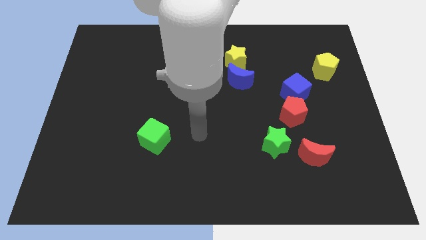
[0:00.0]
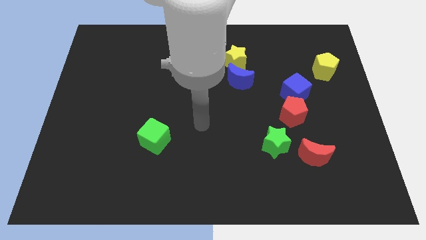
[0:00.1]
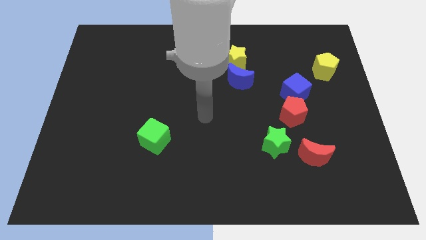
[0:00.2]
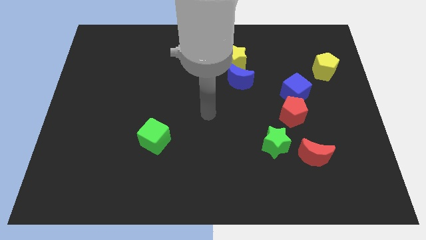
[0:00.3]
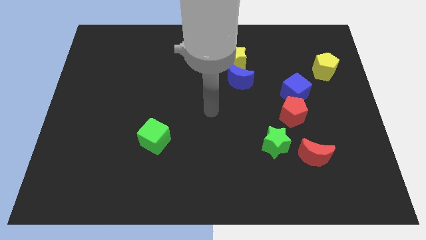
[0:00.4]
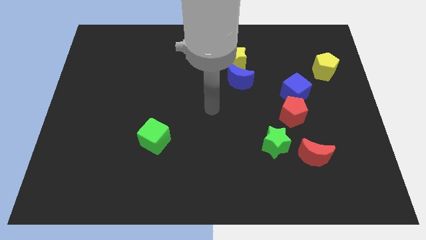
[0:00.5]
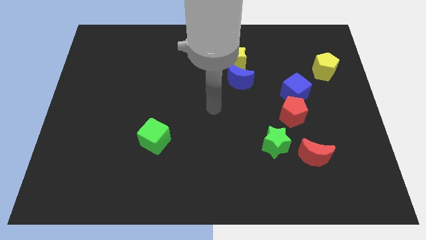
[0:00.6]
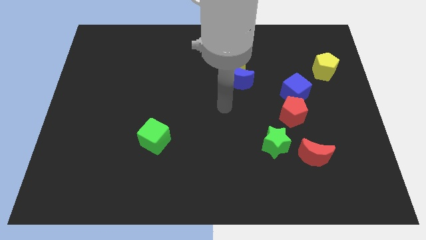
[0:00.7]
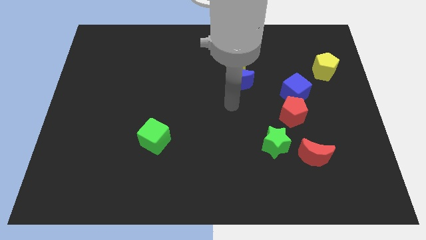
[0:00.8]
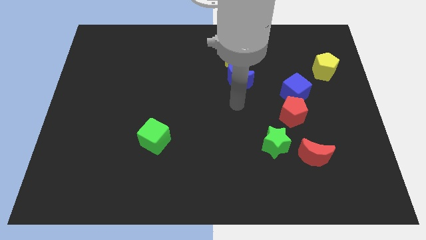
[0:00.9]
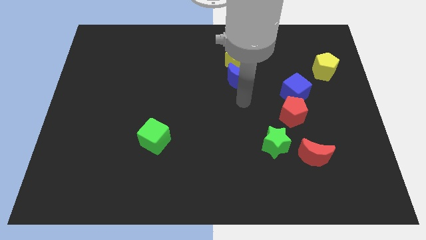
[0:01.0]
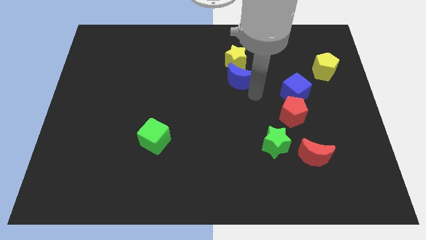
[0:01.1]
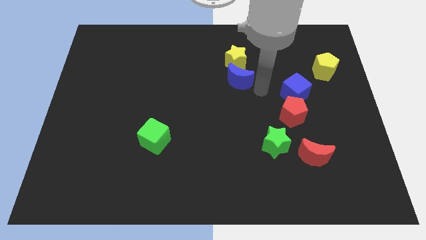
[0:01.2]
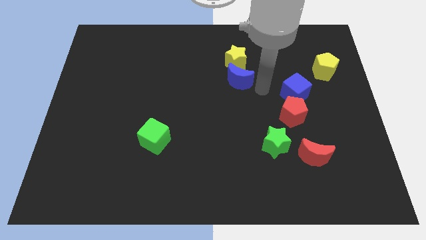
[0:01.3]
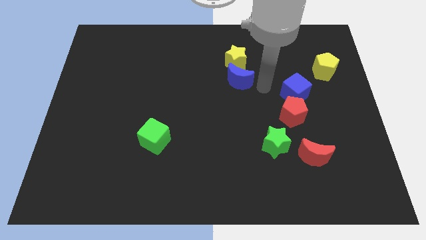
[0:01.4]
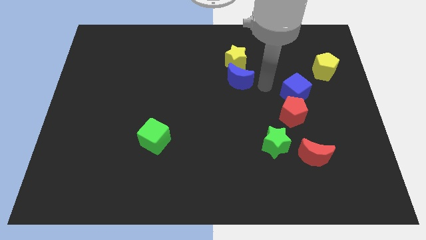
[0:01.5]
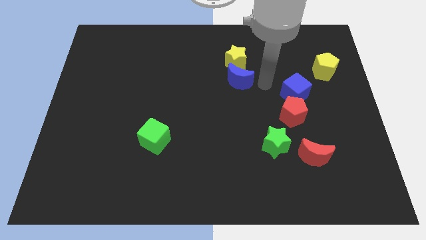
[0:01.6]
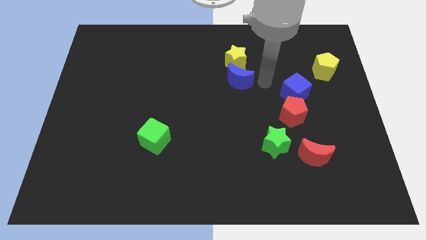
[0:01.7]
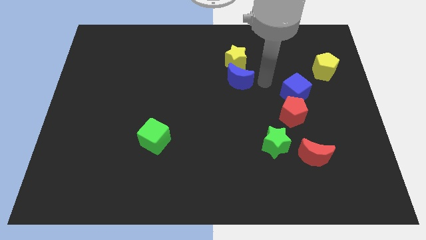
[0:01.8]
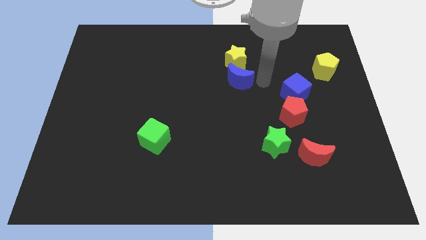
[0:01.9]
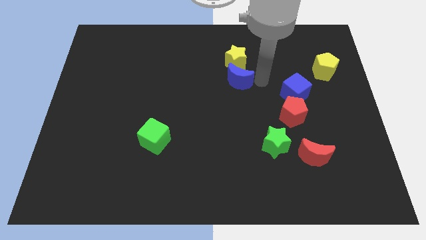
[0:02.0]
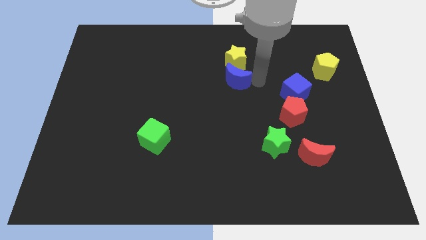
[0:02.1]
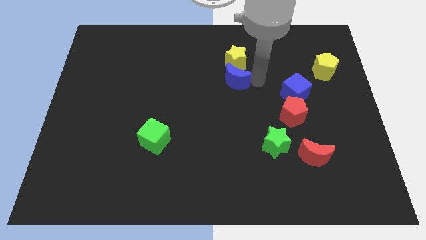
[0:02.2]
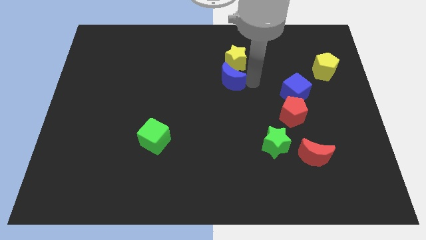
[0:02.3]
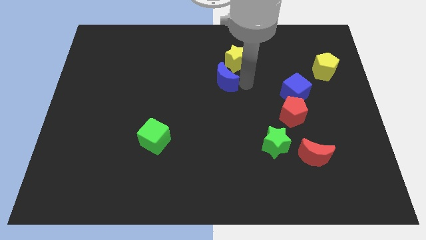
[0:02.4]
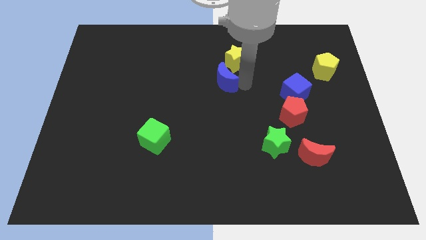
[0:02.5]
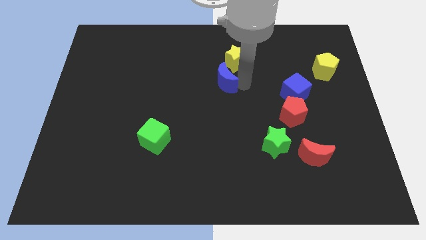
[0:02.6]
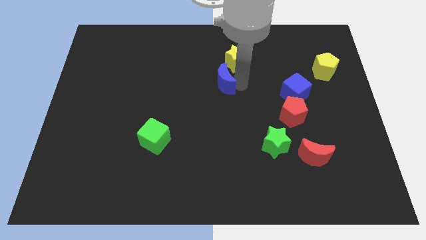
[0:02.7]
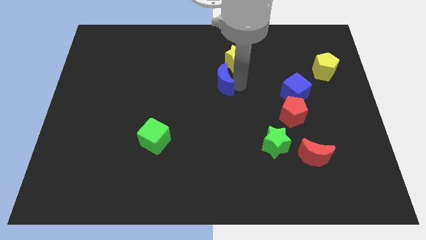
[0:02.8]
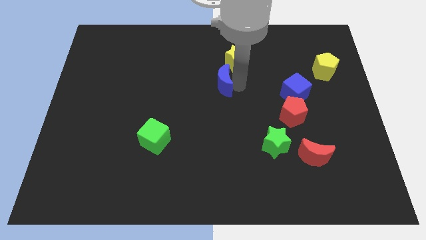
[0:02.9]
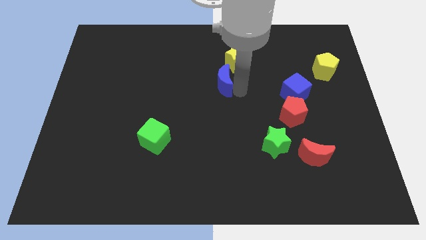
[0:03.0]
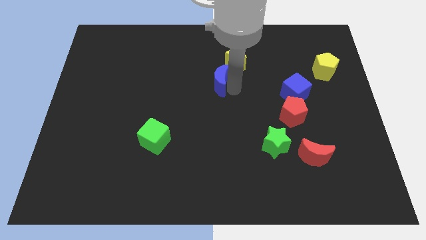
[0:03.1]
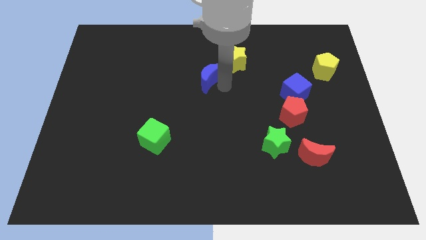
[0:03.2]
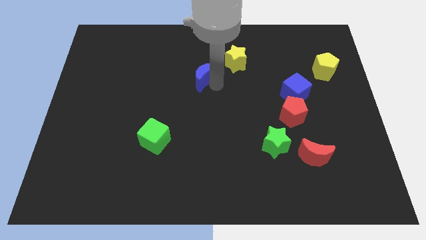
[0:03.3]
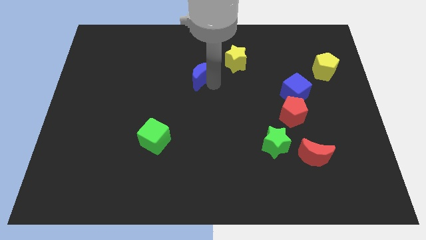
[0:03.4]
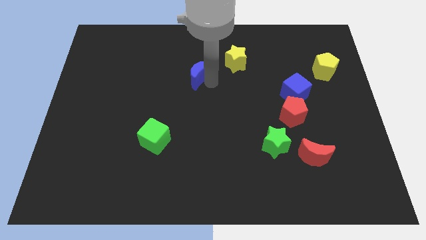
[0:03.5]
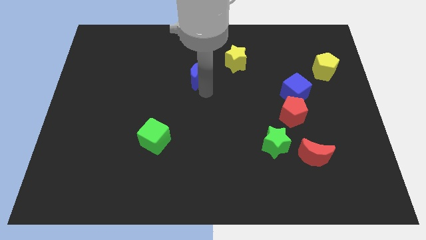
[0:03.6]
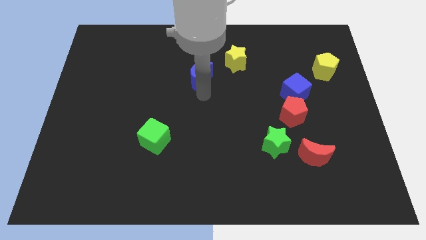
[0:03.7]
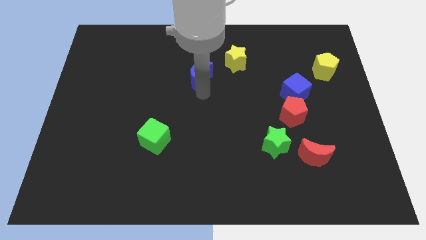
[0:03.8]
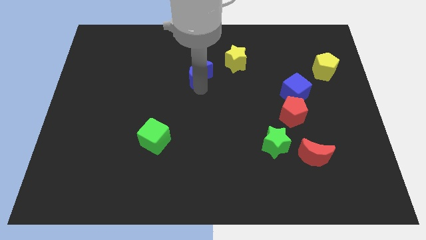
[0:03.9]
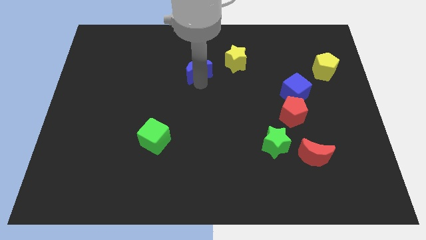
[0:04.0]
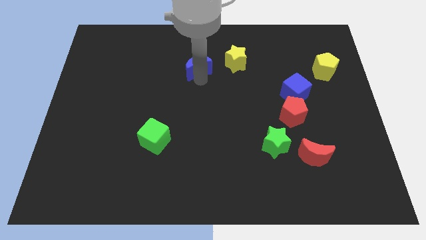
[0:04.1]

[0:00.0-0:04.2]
push the blue crescent to the left of the yellow star

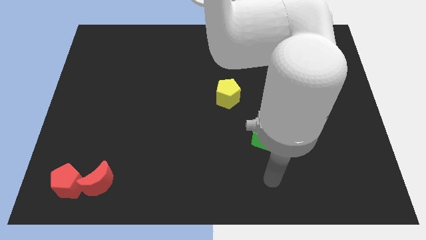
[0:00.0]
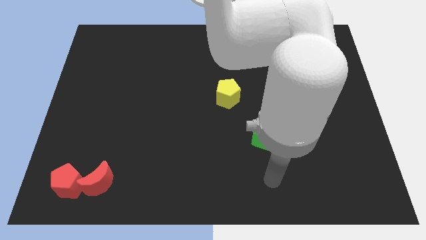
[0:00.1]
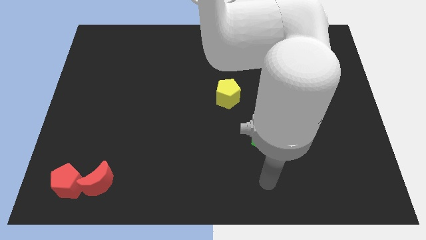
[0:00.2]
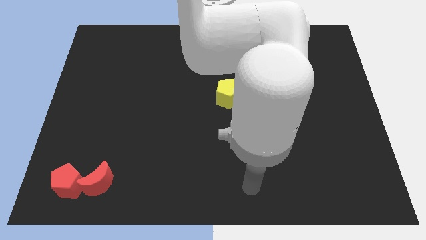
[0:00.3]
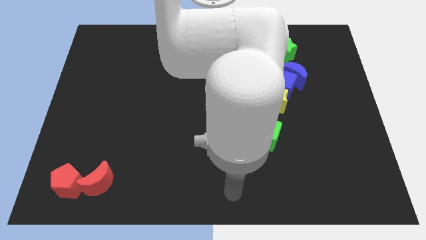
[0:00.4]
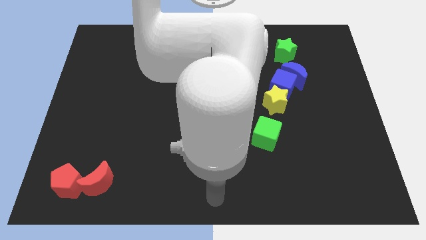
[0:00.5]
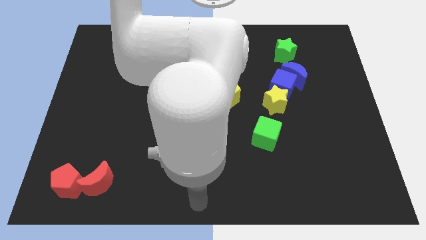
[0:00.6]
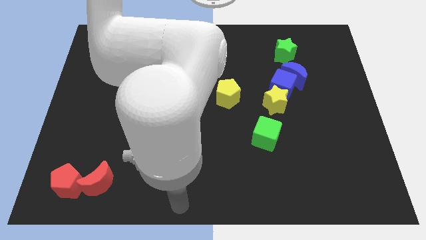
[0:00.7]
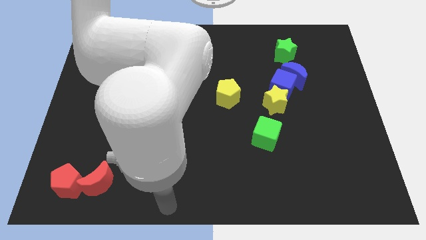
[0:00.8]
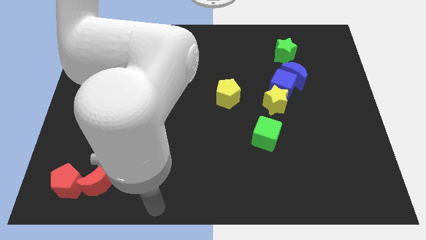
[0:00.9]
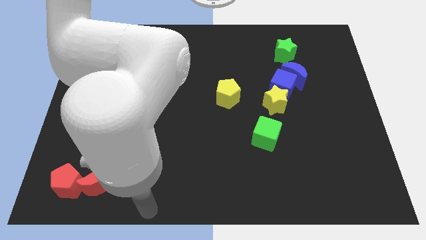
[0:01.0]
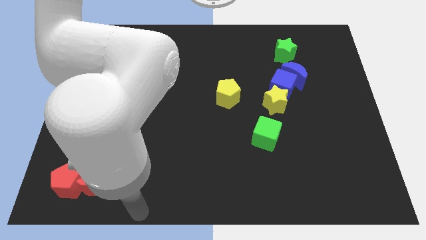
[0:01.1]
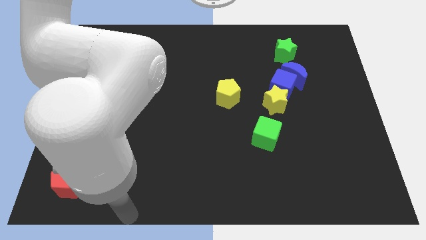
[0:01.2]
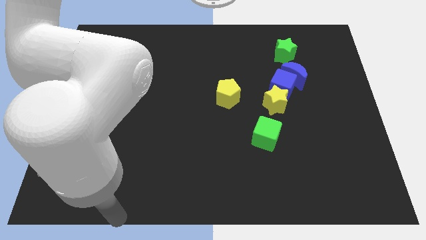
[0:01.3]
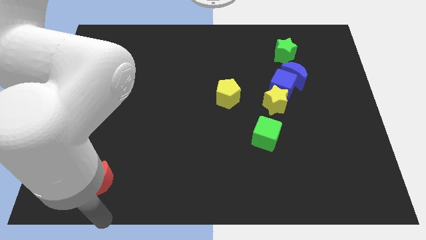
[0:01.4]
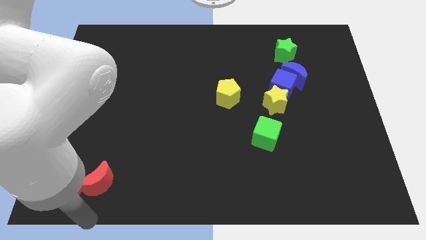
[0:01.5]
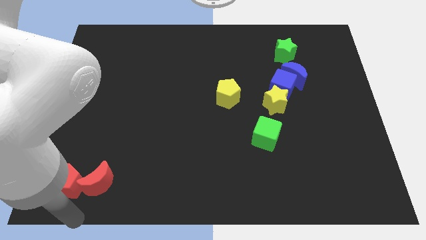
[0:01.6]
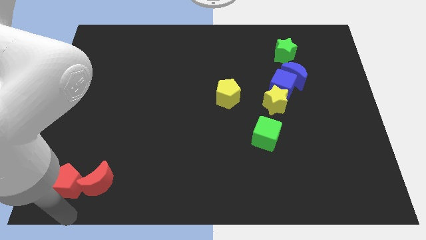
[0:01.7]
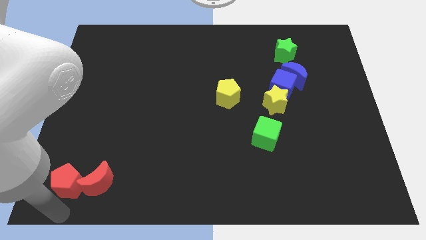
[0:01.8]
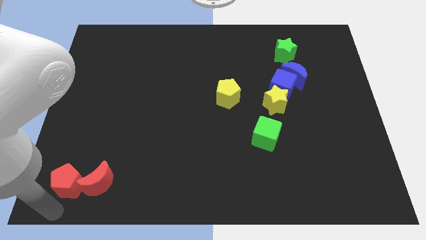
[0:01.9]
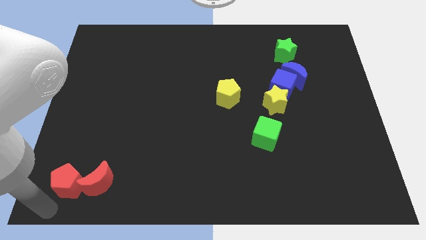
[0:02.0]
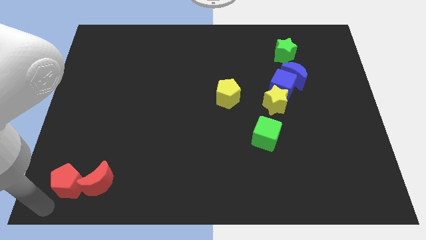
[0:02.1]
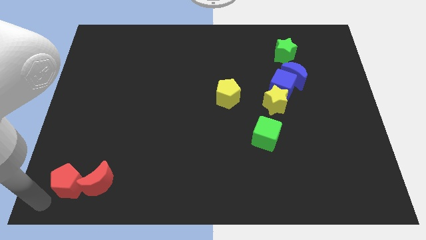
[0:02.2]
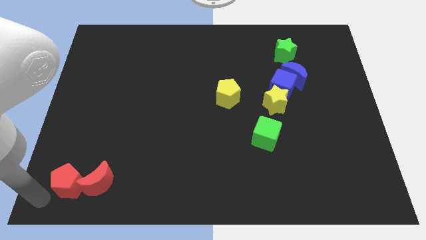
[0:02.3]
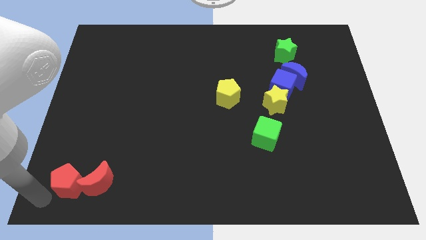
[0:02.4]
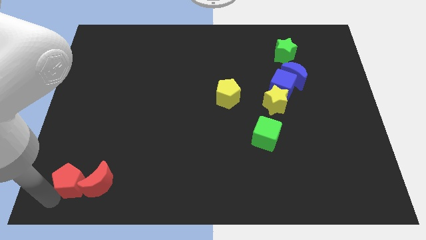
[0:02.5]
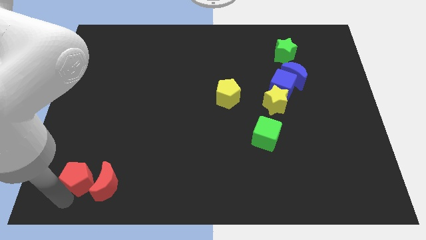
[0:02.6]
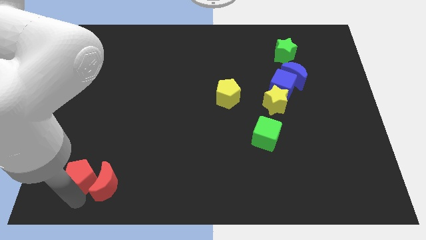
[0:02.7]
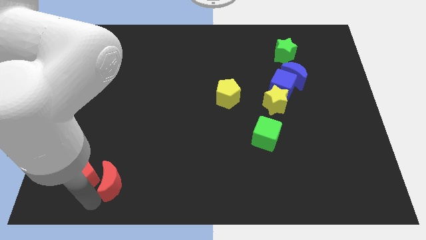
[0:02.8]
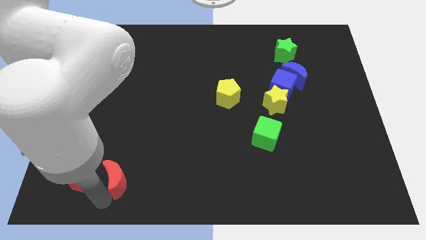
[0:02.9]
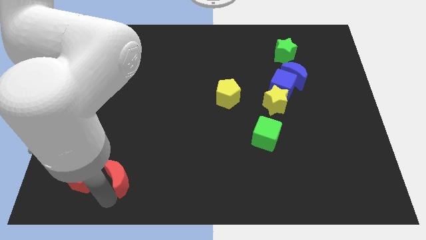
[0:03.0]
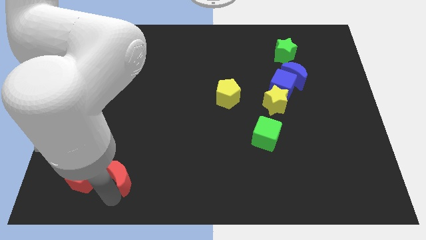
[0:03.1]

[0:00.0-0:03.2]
separate the red moon from the red pentagon

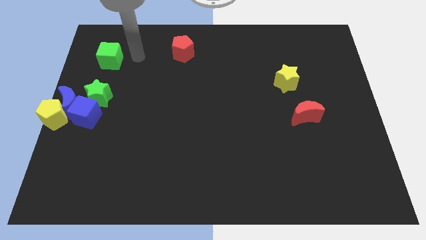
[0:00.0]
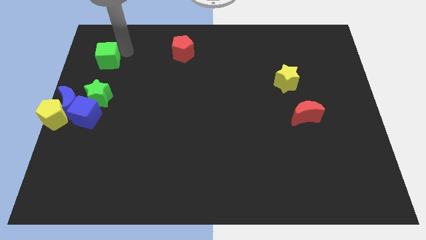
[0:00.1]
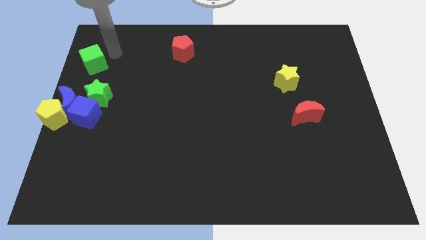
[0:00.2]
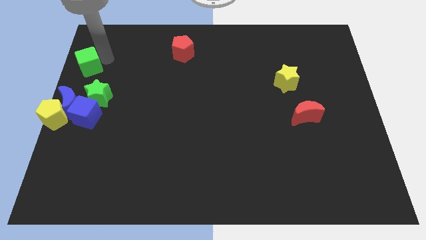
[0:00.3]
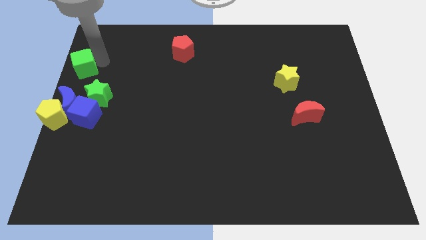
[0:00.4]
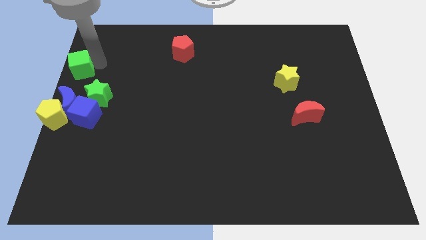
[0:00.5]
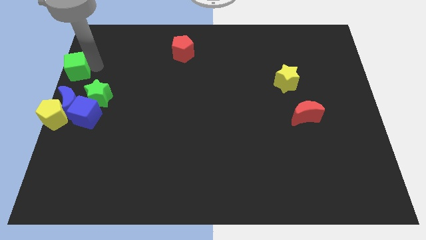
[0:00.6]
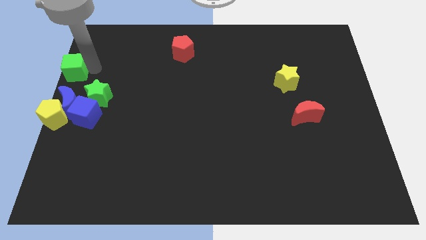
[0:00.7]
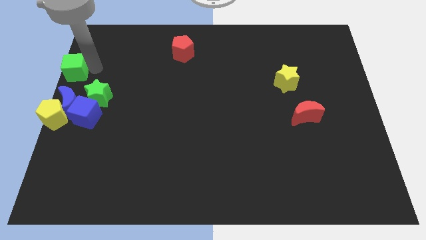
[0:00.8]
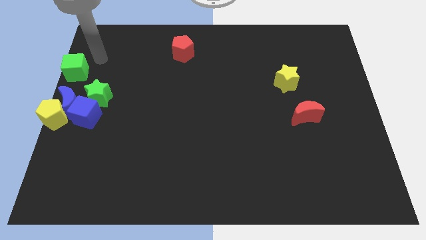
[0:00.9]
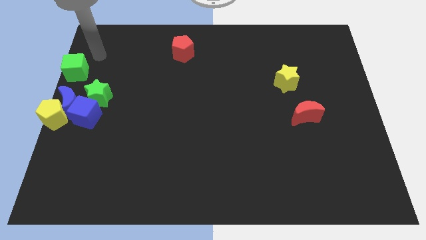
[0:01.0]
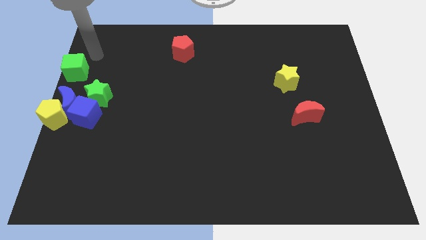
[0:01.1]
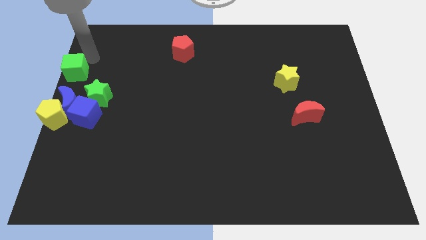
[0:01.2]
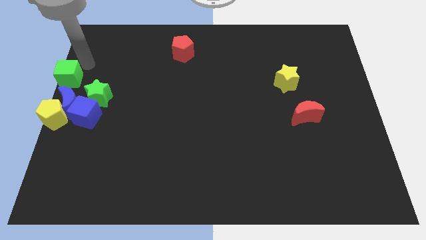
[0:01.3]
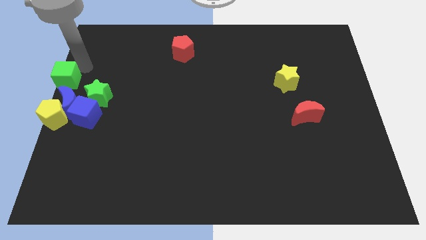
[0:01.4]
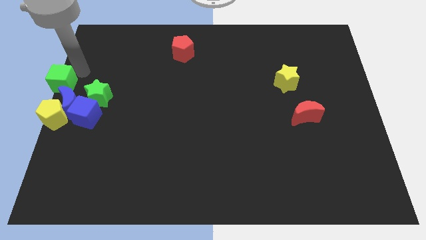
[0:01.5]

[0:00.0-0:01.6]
place the green cube above the blue moon
